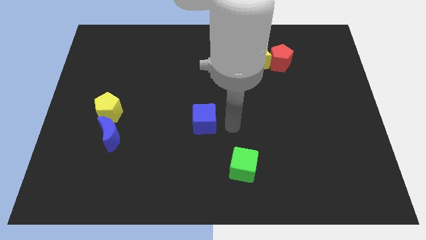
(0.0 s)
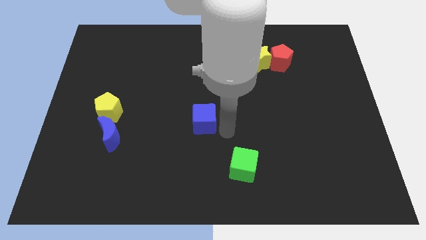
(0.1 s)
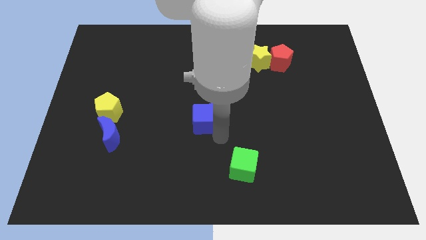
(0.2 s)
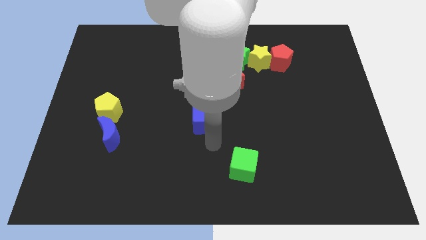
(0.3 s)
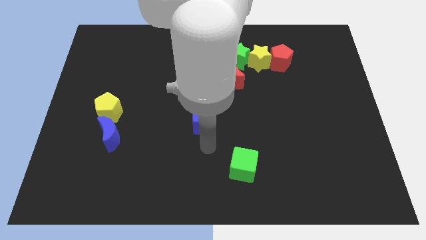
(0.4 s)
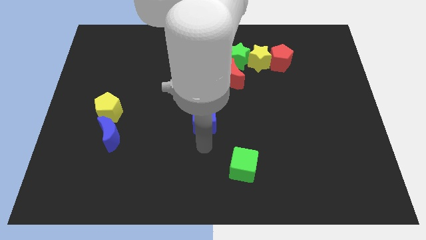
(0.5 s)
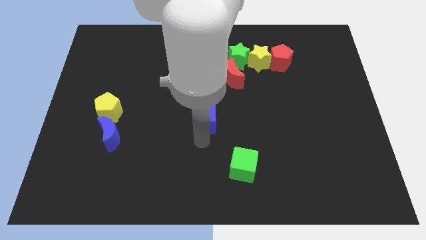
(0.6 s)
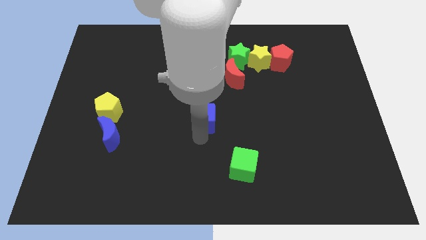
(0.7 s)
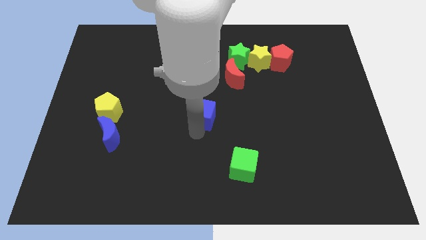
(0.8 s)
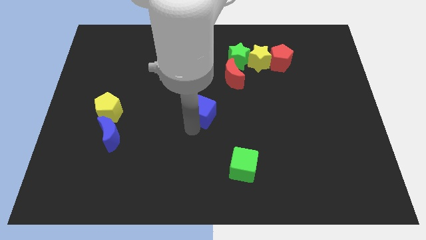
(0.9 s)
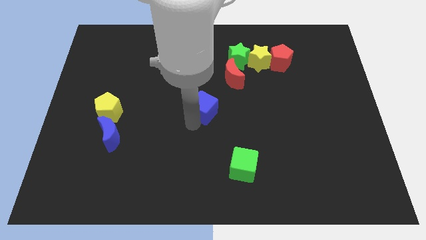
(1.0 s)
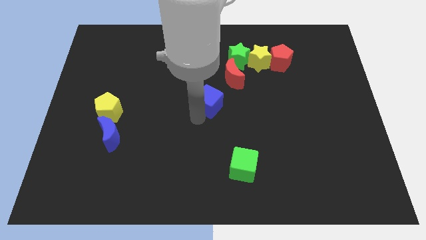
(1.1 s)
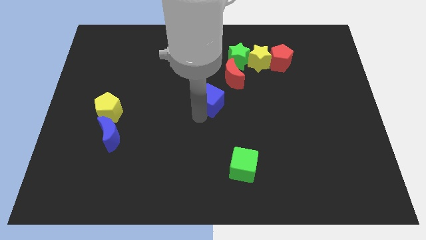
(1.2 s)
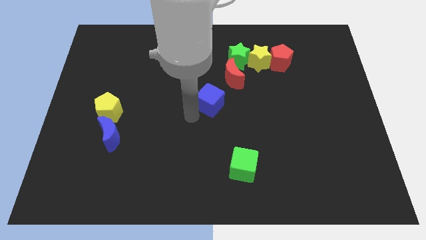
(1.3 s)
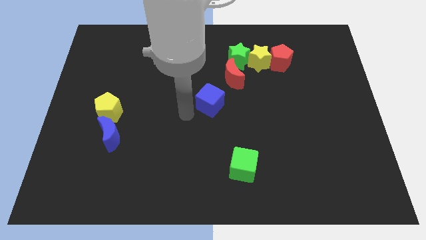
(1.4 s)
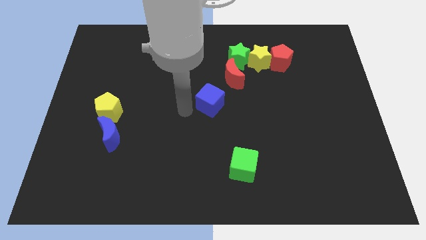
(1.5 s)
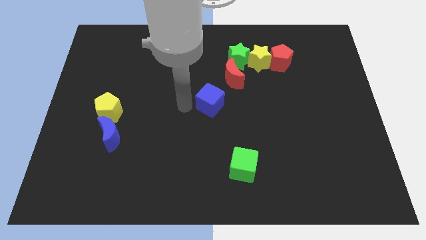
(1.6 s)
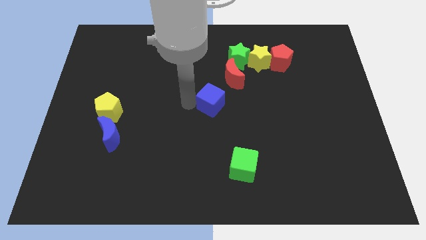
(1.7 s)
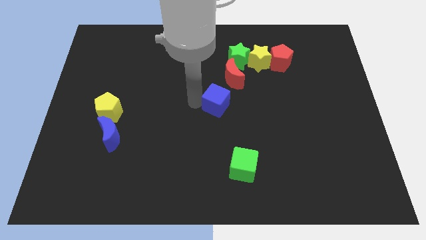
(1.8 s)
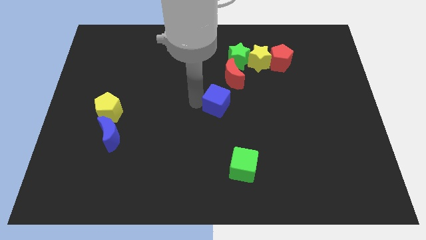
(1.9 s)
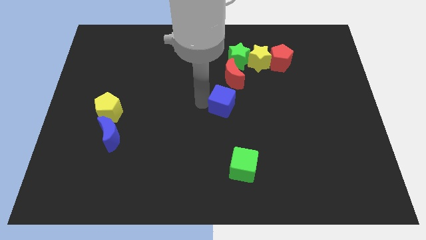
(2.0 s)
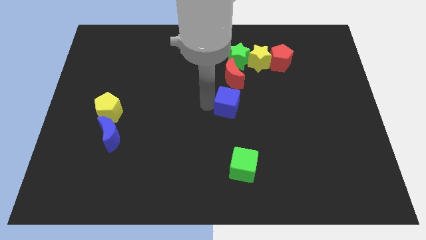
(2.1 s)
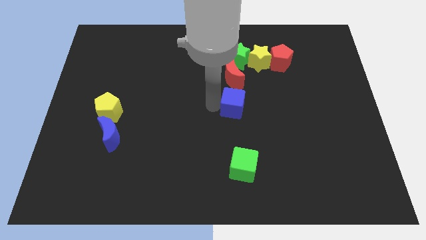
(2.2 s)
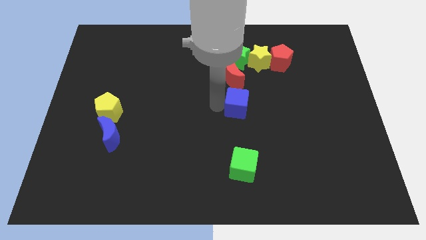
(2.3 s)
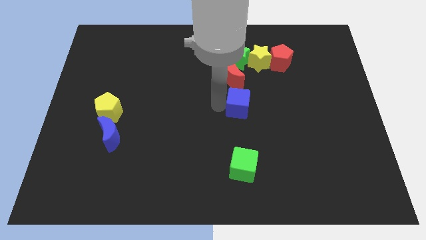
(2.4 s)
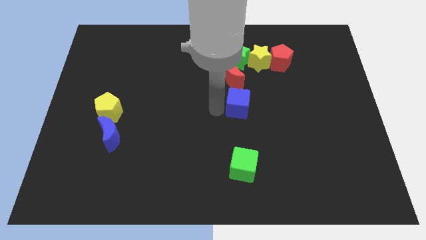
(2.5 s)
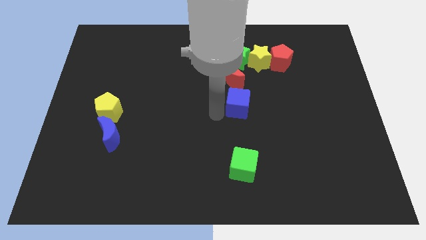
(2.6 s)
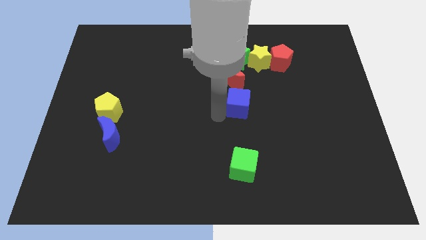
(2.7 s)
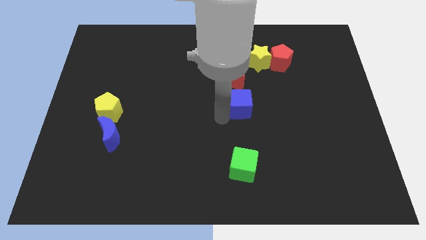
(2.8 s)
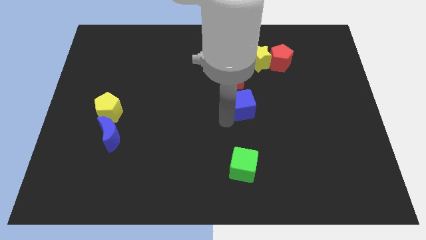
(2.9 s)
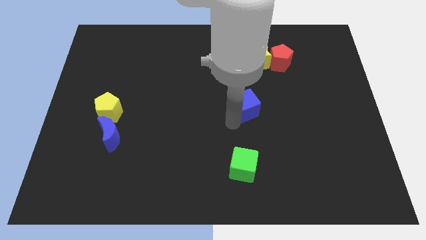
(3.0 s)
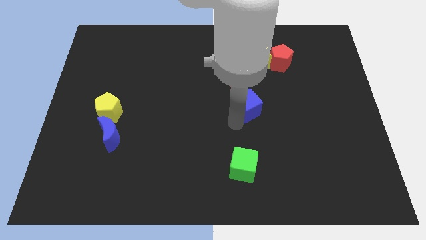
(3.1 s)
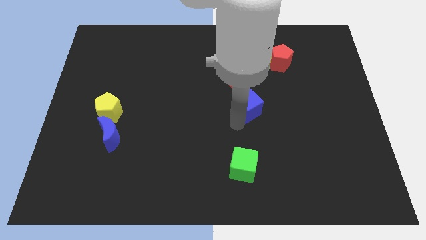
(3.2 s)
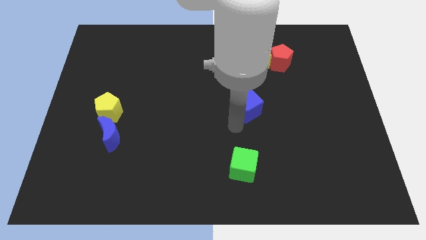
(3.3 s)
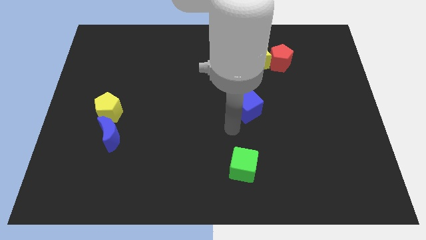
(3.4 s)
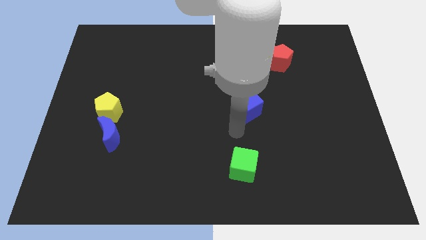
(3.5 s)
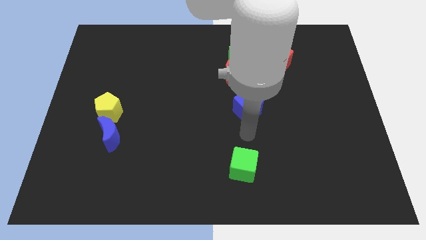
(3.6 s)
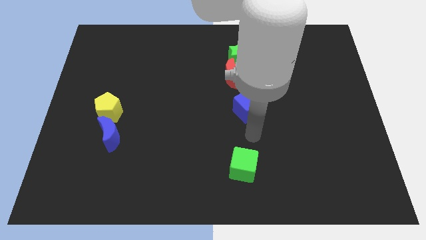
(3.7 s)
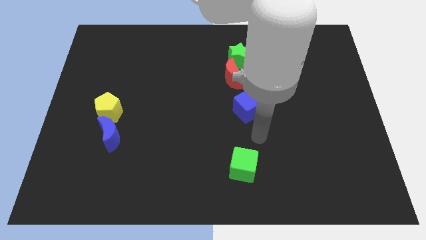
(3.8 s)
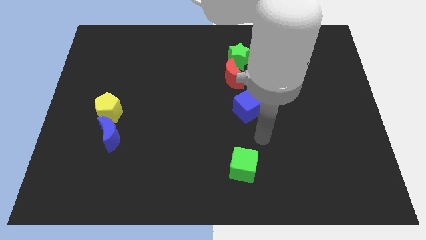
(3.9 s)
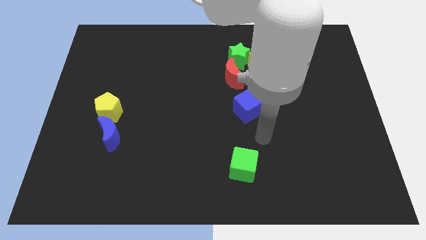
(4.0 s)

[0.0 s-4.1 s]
place the blue cube below the red crescent

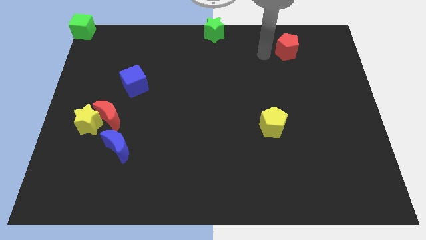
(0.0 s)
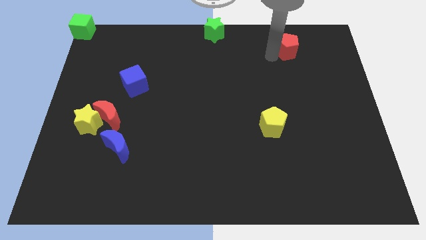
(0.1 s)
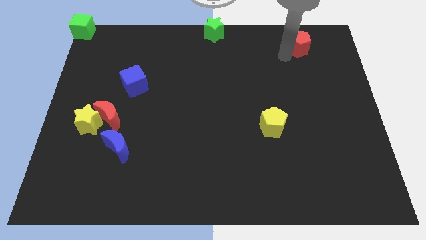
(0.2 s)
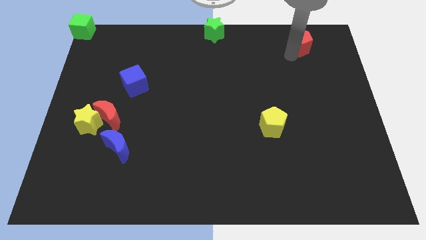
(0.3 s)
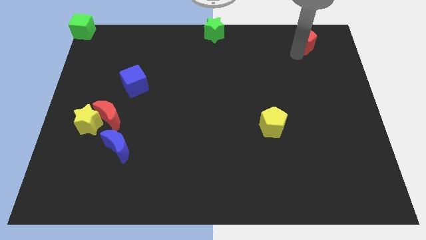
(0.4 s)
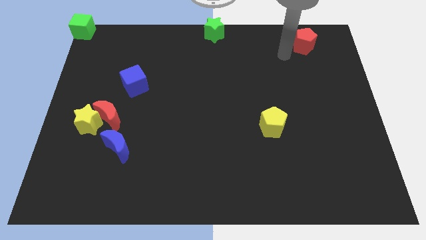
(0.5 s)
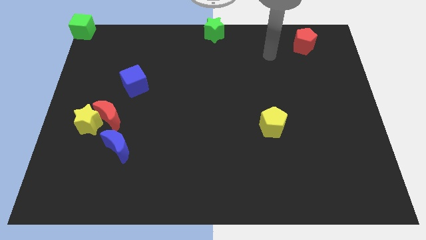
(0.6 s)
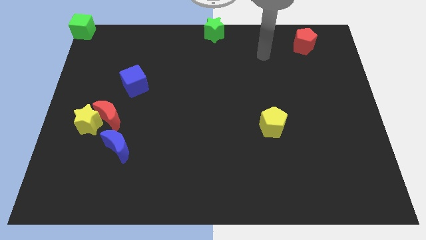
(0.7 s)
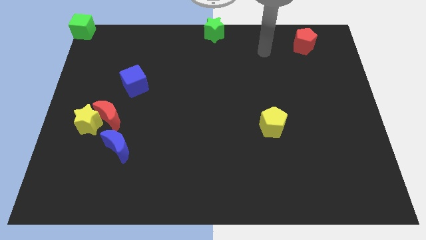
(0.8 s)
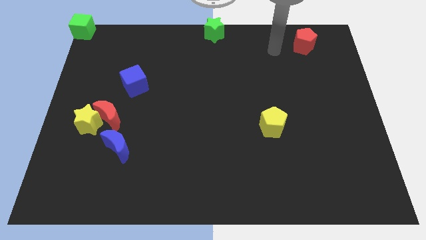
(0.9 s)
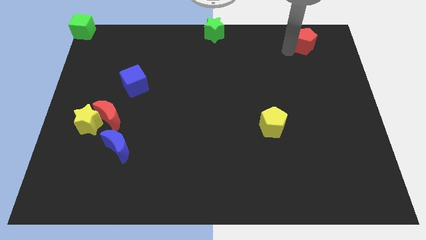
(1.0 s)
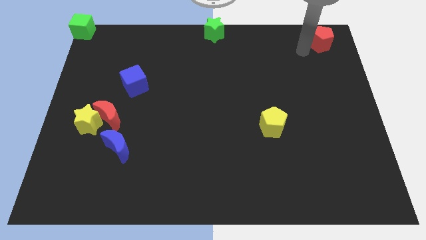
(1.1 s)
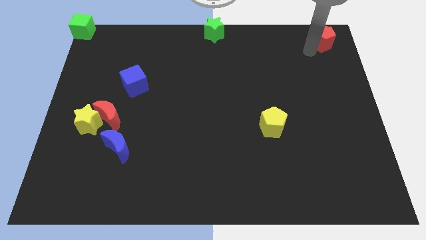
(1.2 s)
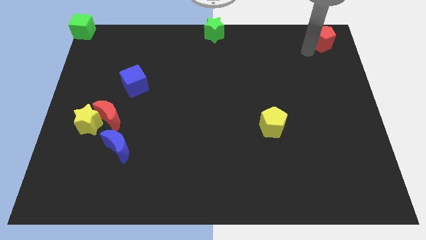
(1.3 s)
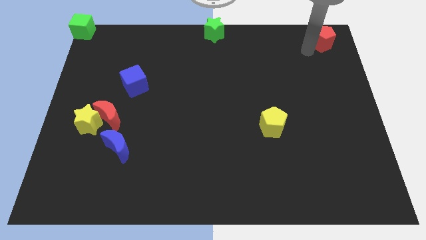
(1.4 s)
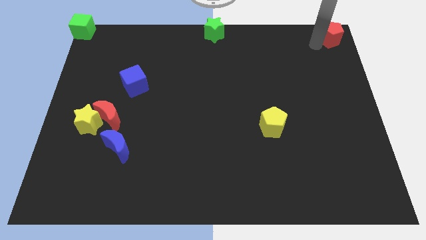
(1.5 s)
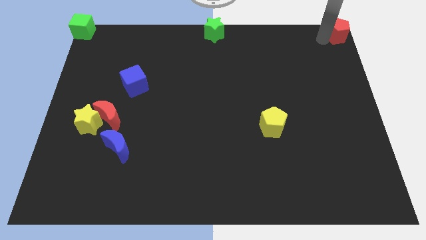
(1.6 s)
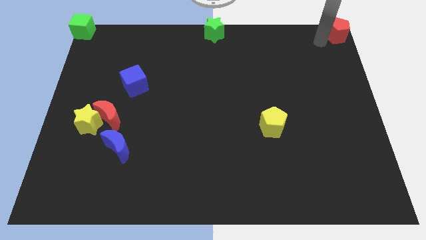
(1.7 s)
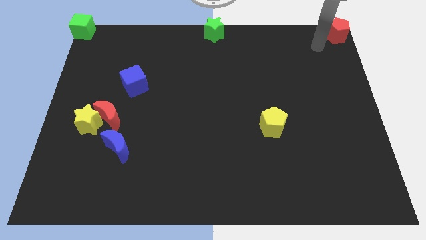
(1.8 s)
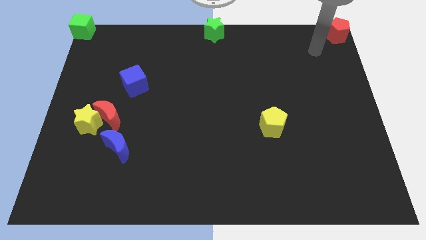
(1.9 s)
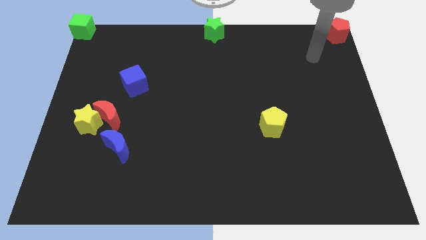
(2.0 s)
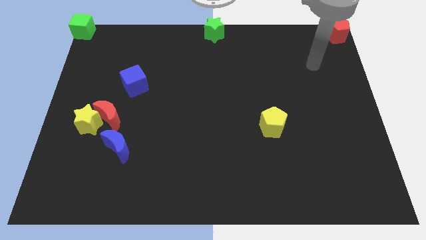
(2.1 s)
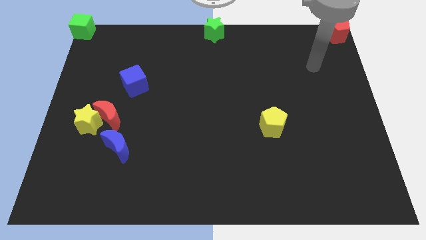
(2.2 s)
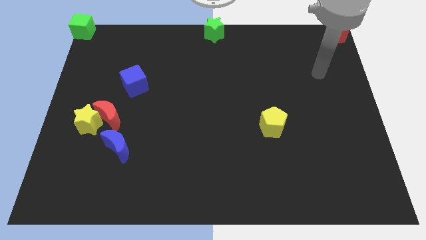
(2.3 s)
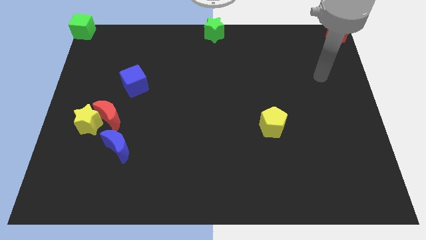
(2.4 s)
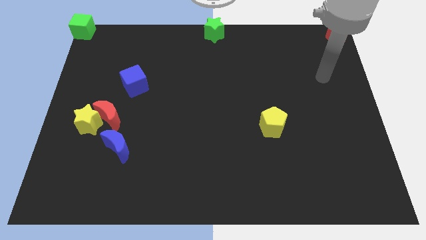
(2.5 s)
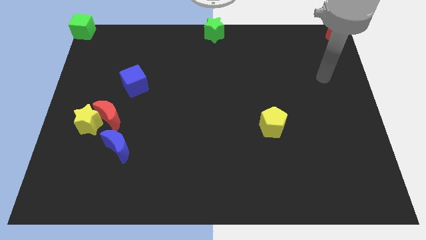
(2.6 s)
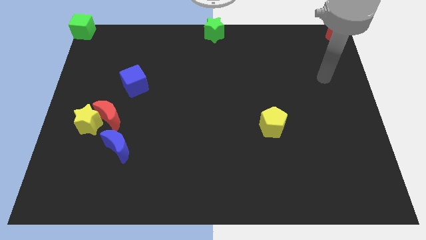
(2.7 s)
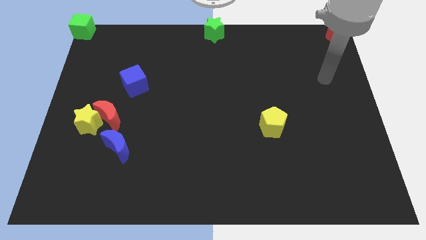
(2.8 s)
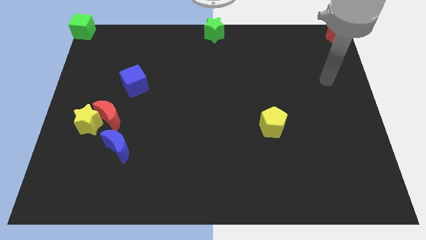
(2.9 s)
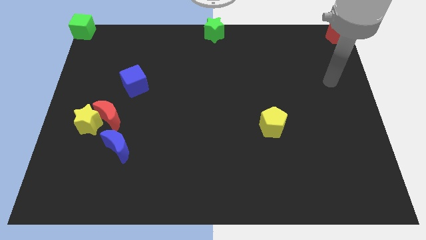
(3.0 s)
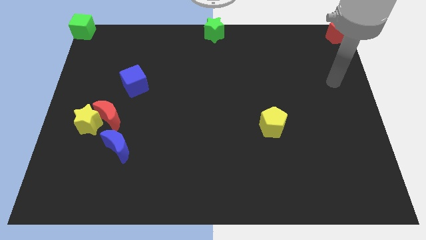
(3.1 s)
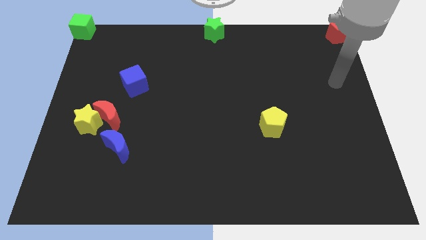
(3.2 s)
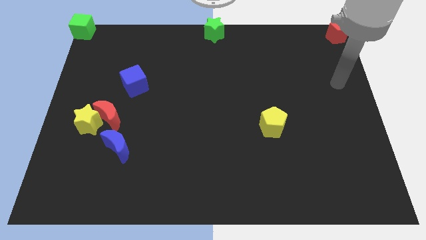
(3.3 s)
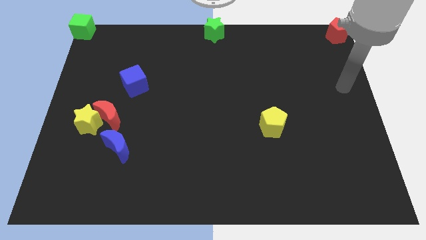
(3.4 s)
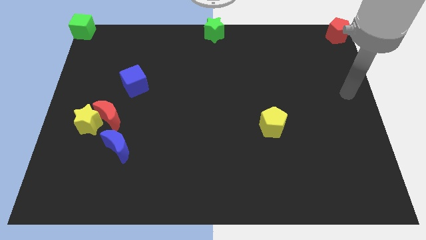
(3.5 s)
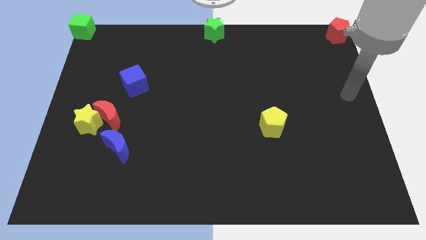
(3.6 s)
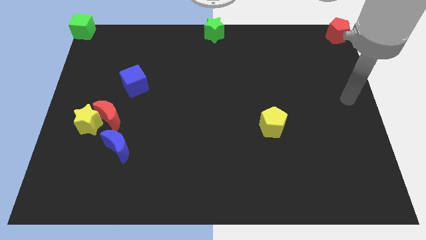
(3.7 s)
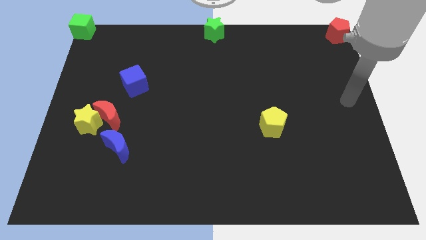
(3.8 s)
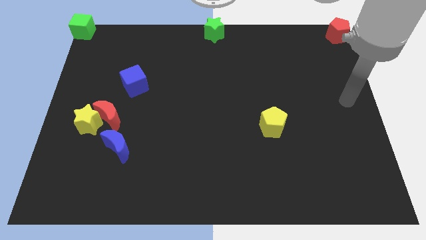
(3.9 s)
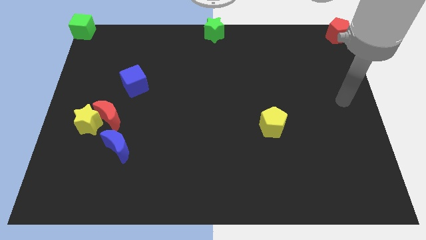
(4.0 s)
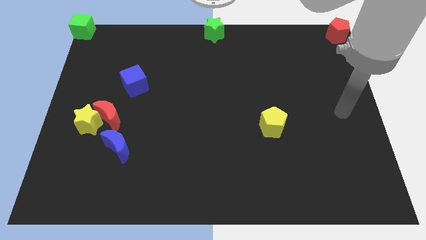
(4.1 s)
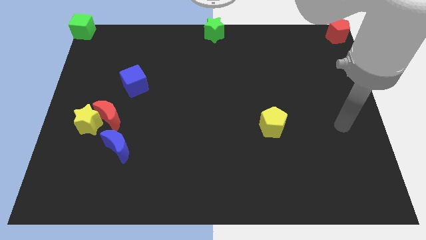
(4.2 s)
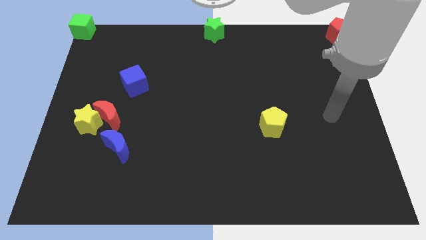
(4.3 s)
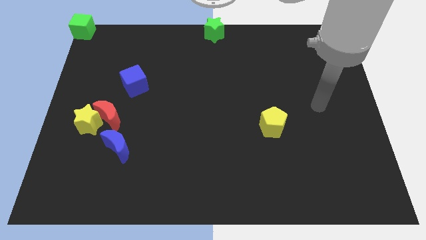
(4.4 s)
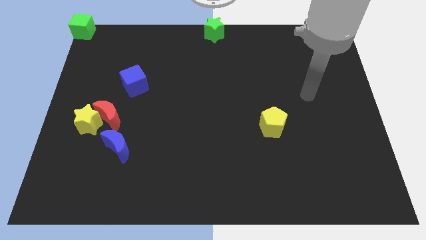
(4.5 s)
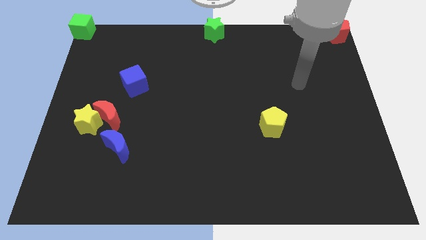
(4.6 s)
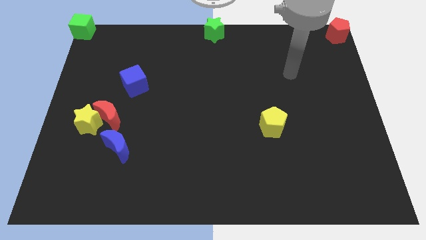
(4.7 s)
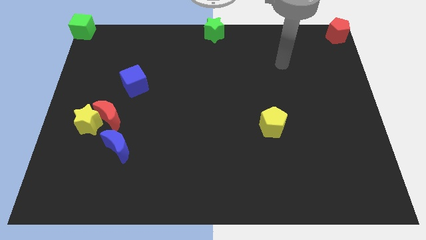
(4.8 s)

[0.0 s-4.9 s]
place the red pentagon at top right corner of the board

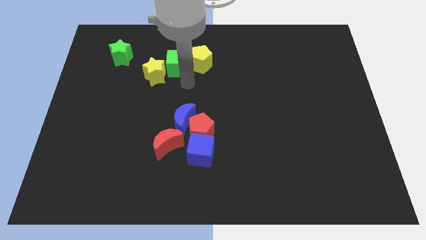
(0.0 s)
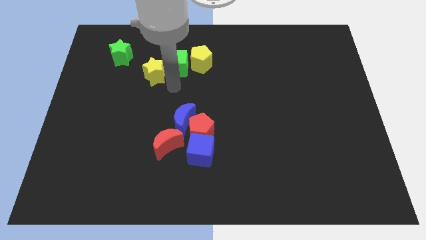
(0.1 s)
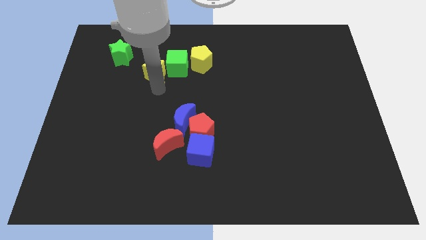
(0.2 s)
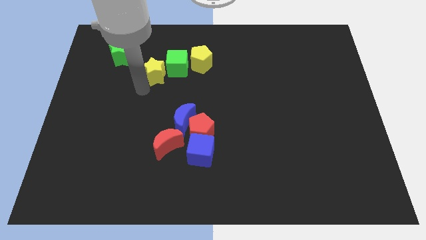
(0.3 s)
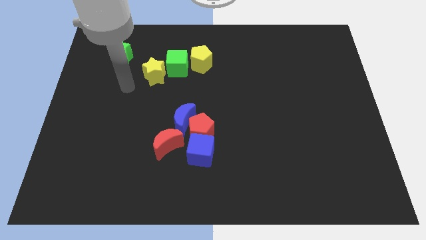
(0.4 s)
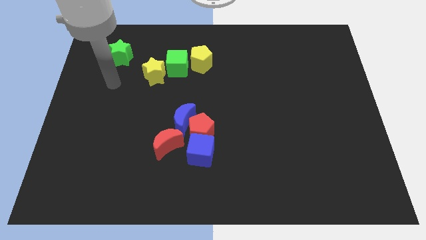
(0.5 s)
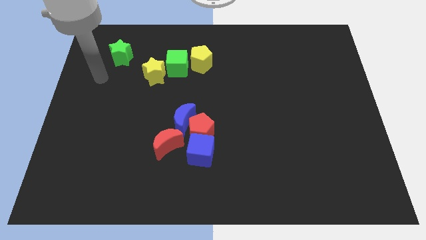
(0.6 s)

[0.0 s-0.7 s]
place the arm at the left side of the yellow star
